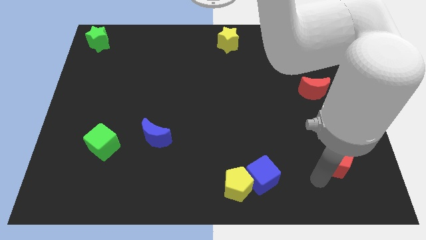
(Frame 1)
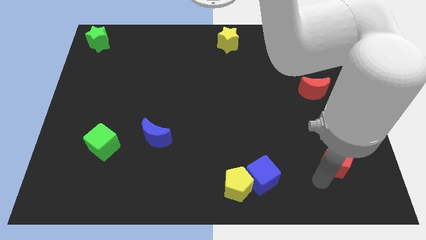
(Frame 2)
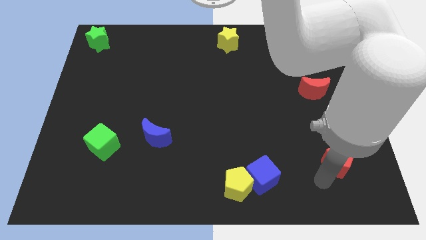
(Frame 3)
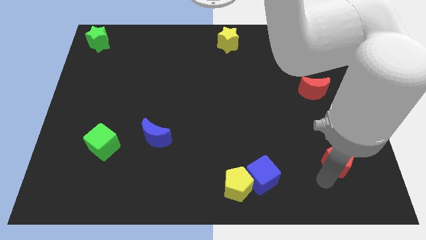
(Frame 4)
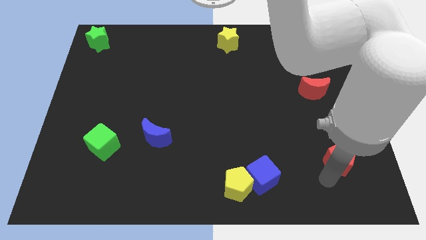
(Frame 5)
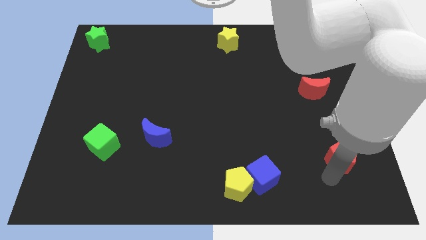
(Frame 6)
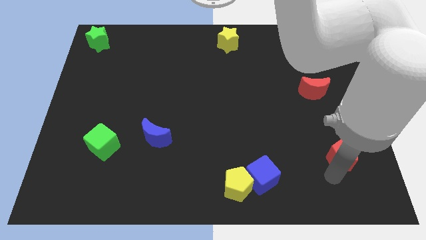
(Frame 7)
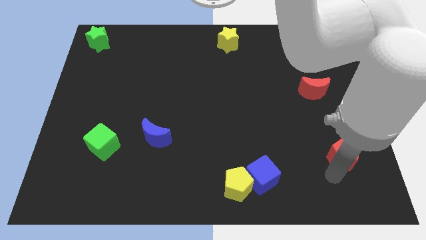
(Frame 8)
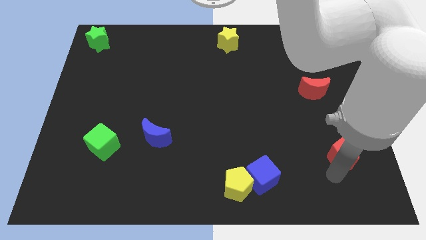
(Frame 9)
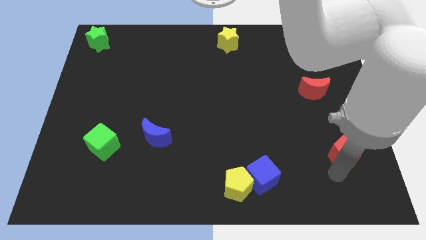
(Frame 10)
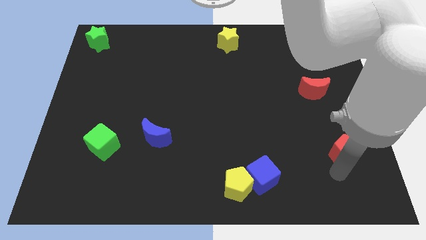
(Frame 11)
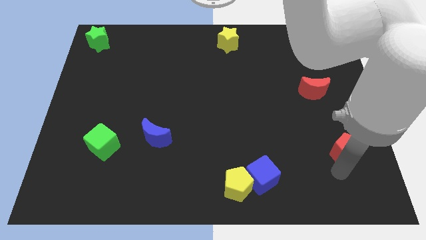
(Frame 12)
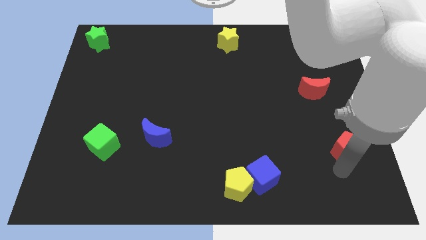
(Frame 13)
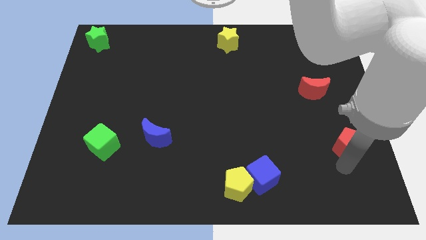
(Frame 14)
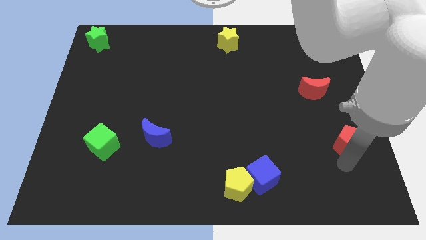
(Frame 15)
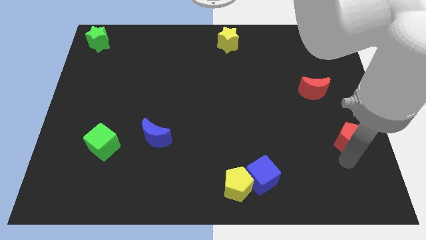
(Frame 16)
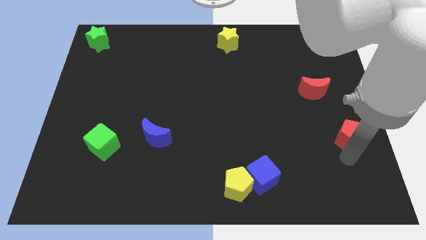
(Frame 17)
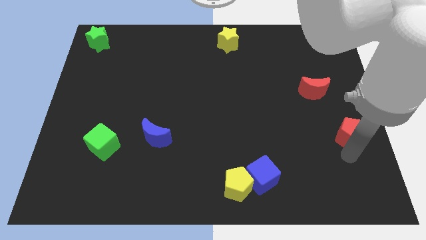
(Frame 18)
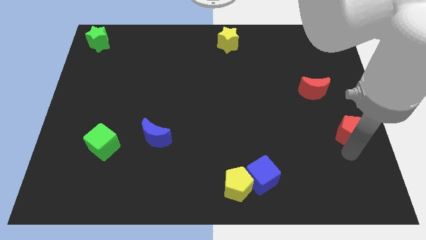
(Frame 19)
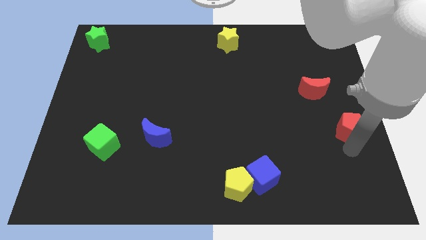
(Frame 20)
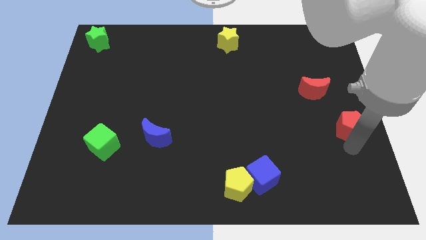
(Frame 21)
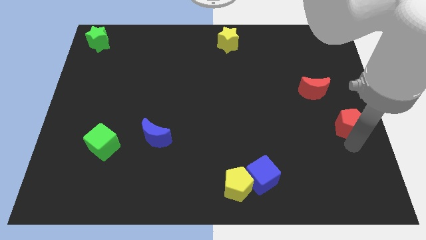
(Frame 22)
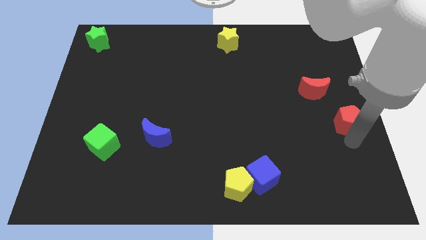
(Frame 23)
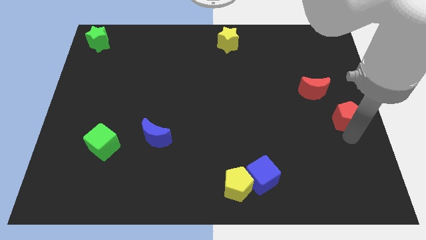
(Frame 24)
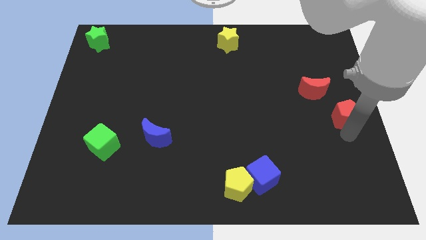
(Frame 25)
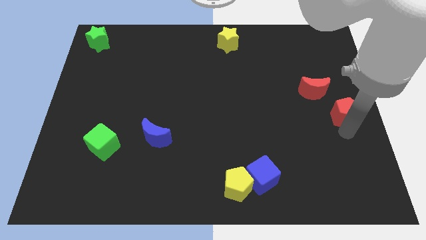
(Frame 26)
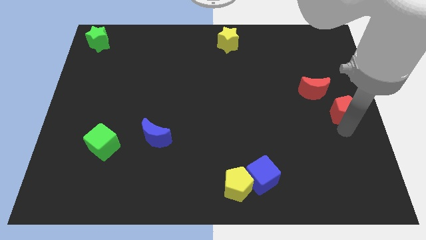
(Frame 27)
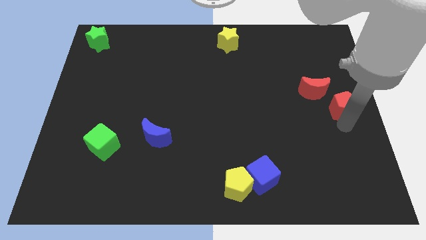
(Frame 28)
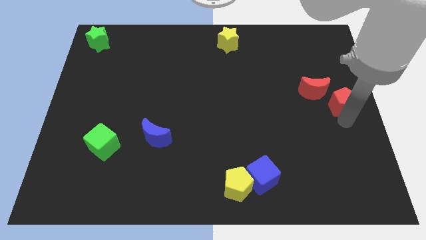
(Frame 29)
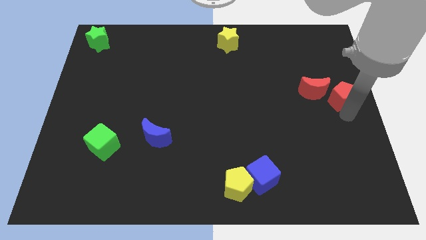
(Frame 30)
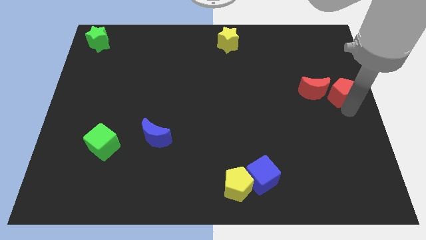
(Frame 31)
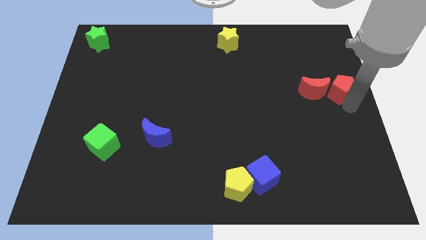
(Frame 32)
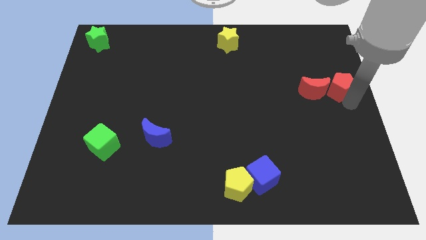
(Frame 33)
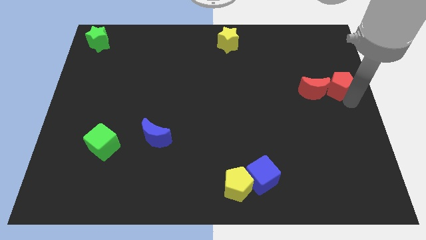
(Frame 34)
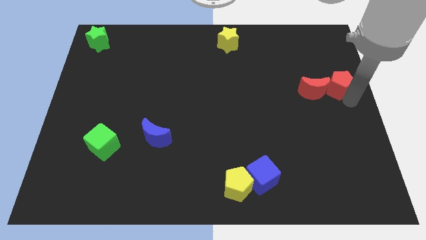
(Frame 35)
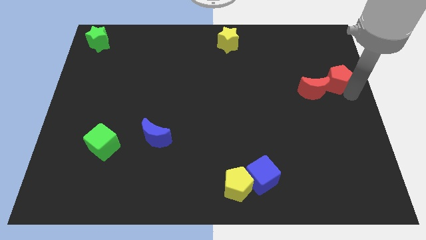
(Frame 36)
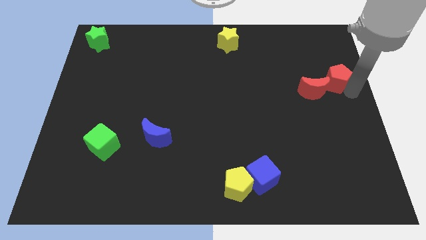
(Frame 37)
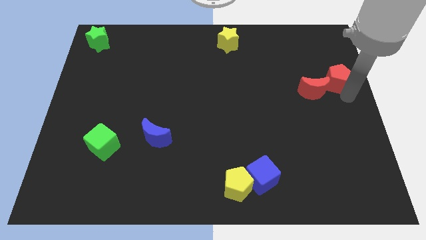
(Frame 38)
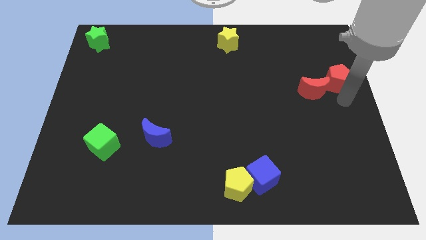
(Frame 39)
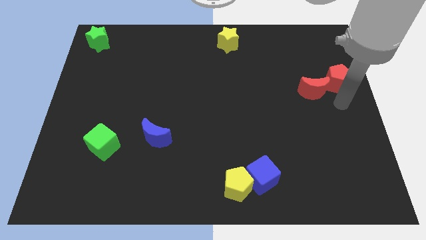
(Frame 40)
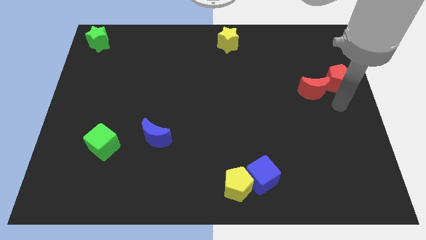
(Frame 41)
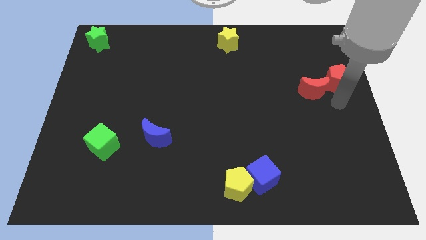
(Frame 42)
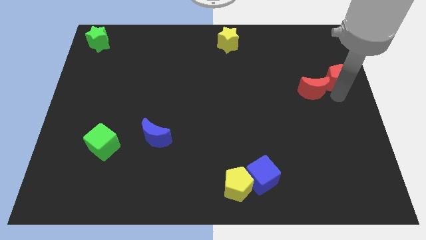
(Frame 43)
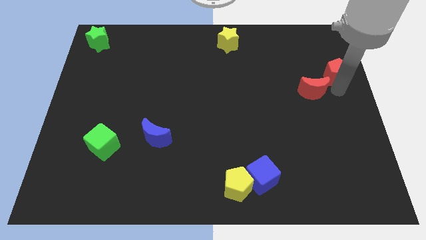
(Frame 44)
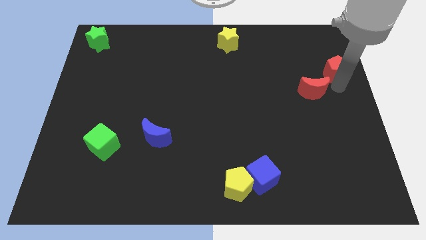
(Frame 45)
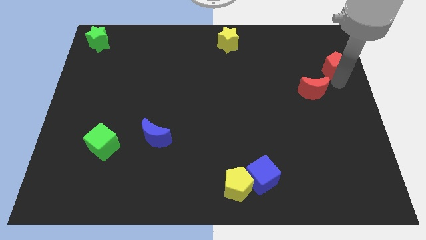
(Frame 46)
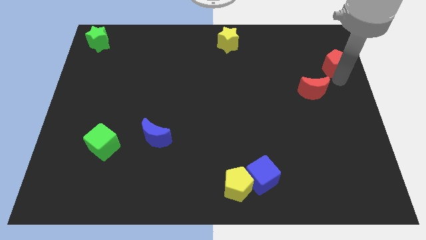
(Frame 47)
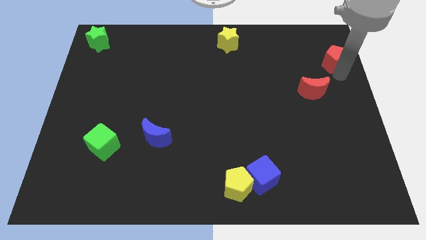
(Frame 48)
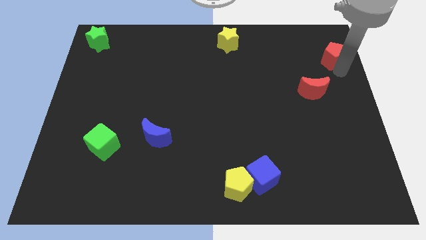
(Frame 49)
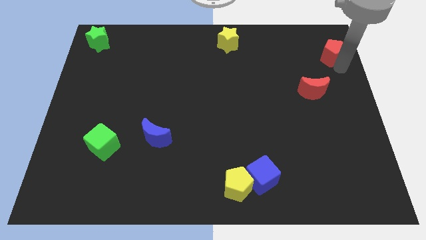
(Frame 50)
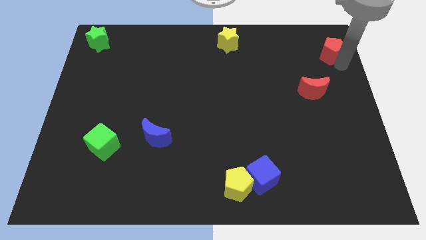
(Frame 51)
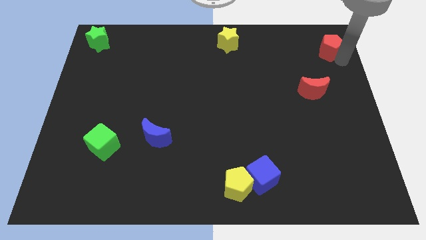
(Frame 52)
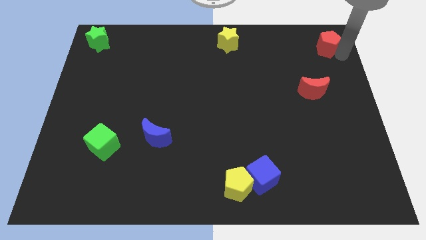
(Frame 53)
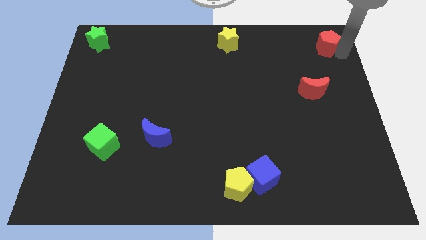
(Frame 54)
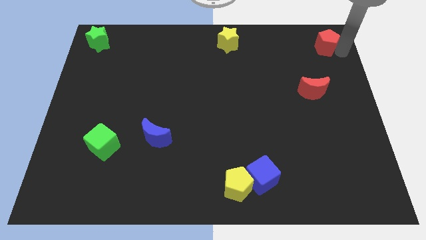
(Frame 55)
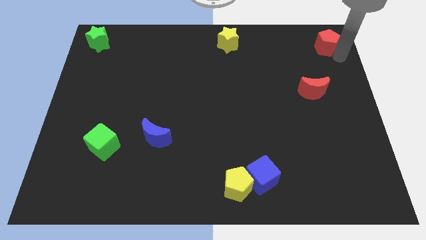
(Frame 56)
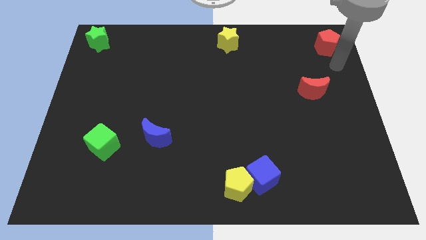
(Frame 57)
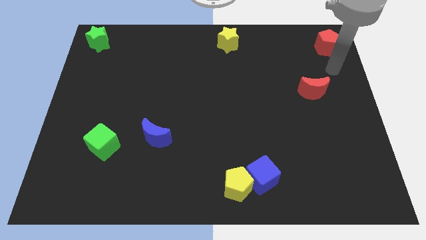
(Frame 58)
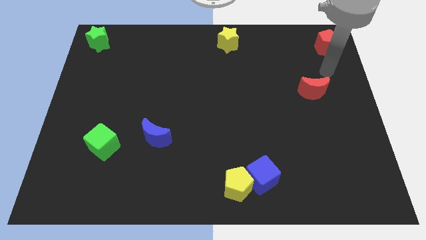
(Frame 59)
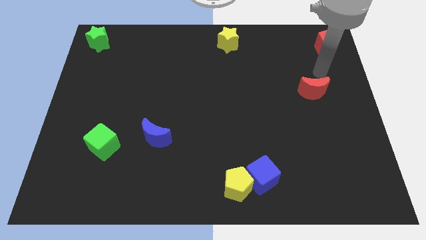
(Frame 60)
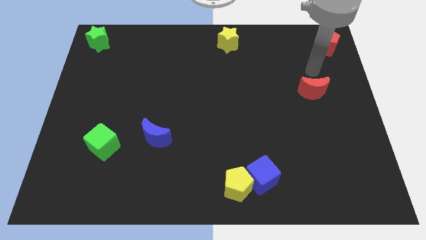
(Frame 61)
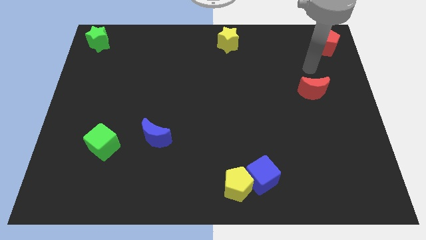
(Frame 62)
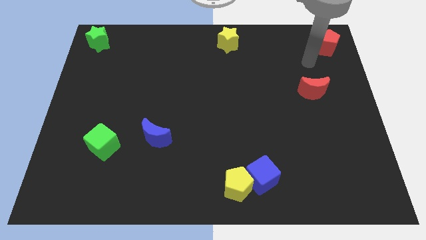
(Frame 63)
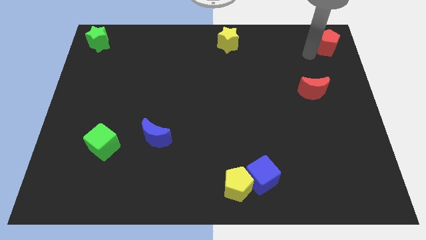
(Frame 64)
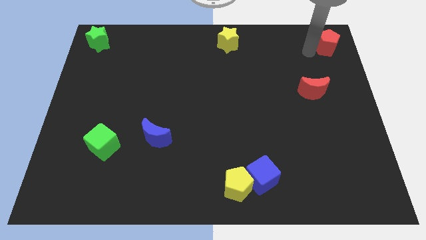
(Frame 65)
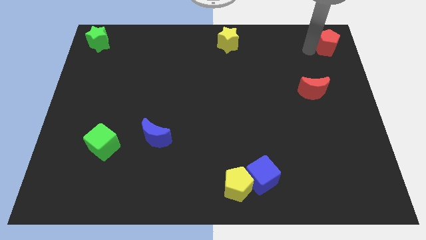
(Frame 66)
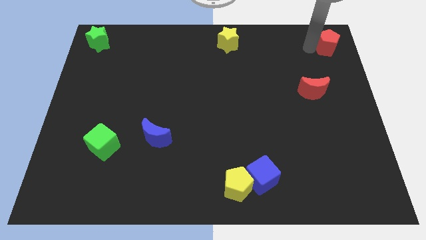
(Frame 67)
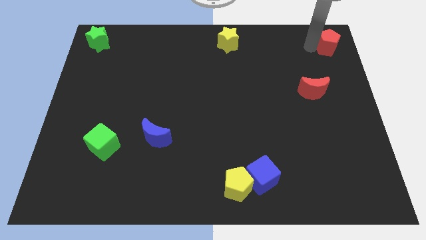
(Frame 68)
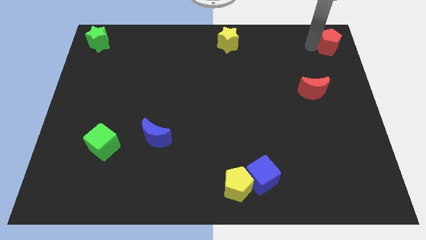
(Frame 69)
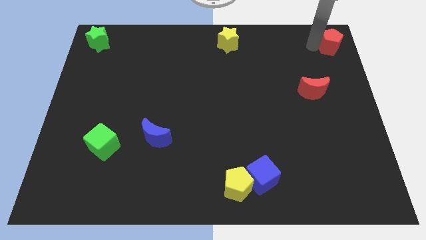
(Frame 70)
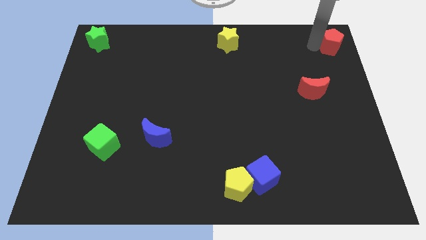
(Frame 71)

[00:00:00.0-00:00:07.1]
place the red pentagon on the top right corner of the board

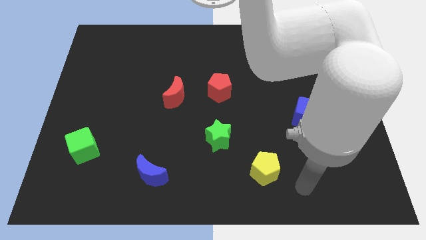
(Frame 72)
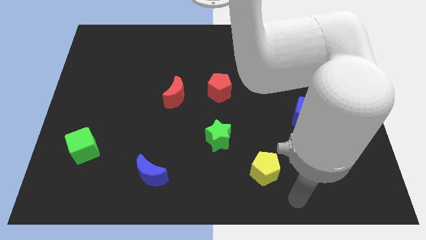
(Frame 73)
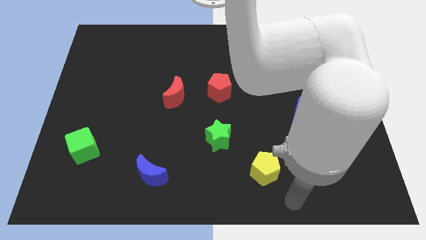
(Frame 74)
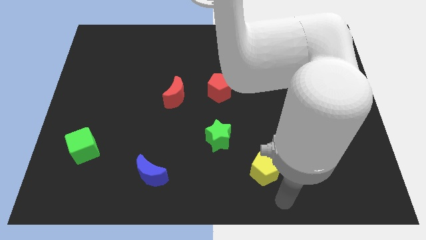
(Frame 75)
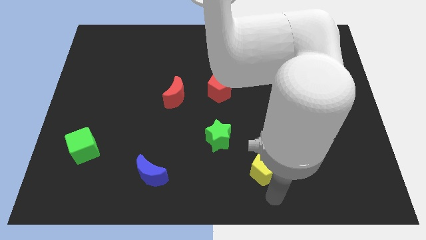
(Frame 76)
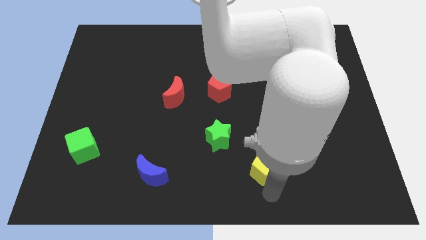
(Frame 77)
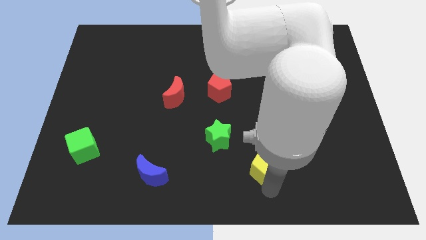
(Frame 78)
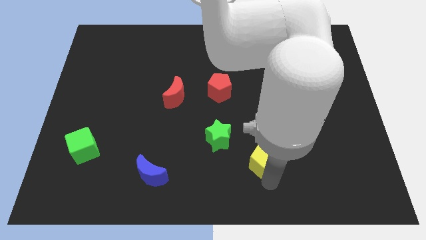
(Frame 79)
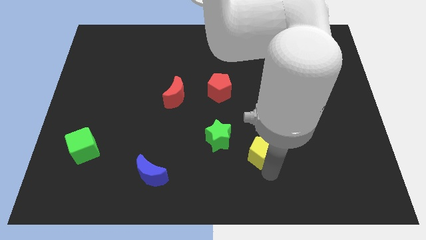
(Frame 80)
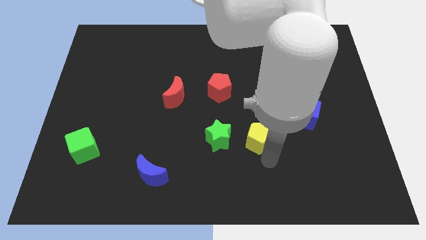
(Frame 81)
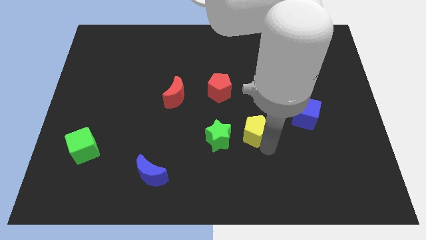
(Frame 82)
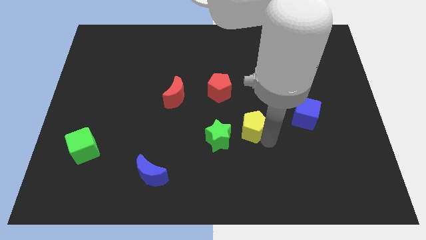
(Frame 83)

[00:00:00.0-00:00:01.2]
place the yellow pentagon to the right of the green star

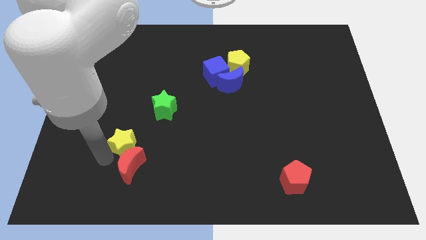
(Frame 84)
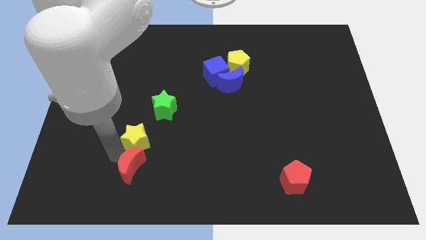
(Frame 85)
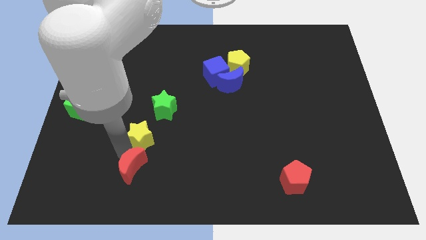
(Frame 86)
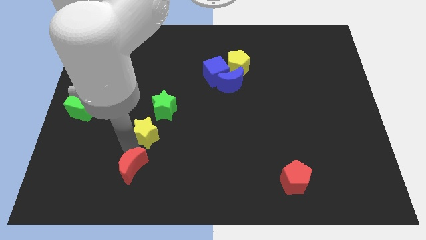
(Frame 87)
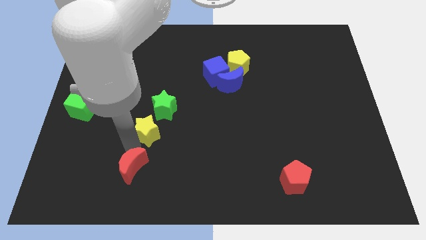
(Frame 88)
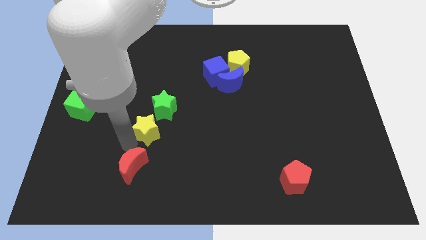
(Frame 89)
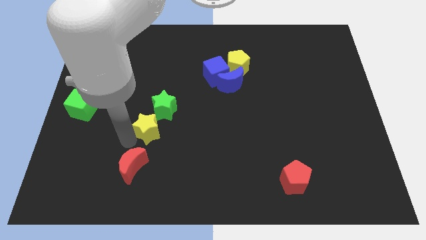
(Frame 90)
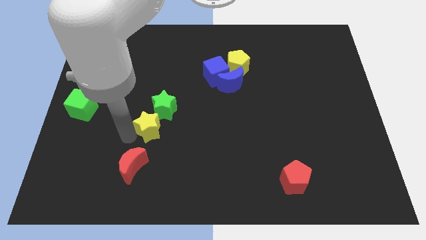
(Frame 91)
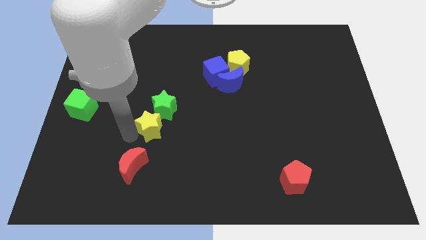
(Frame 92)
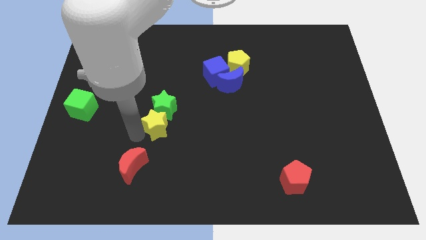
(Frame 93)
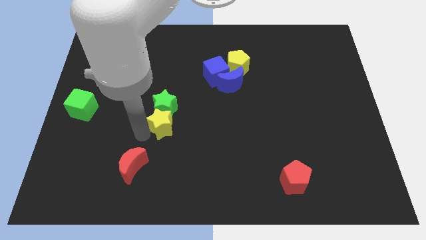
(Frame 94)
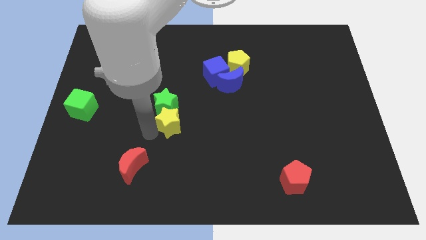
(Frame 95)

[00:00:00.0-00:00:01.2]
push the yellow star into the bottom of the green star
